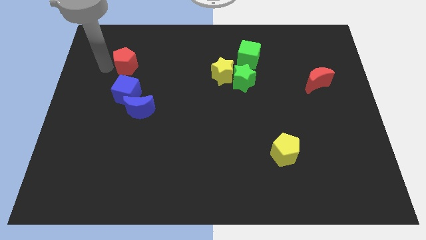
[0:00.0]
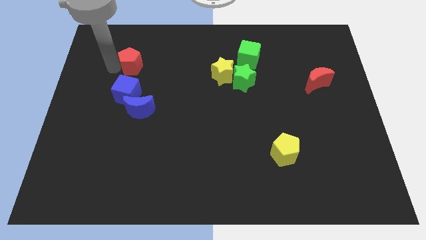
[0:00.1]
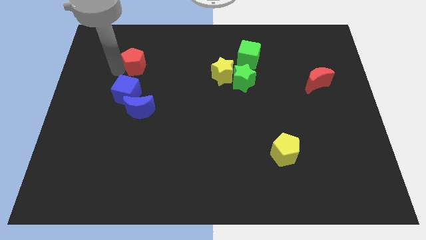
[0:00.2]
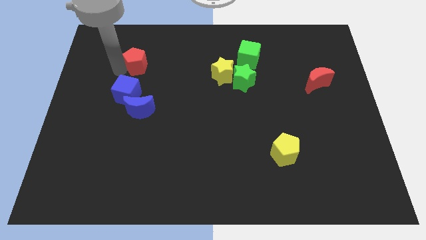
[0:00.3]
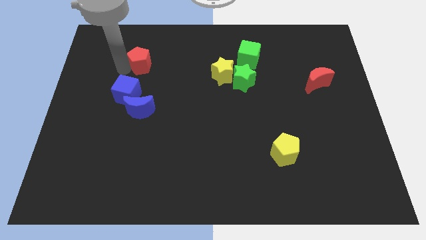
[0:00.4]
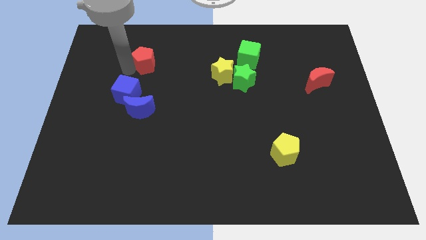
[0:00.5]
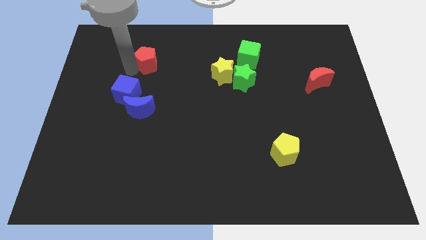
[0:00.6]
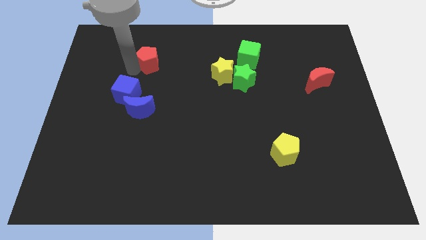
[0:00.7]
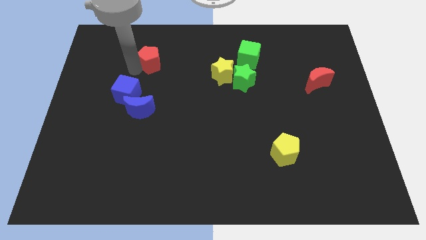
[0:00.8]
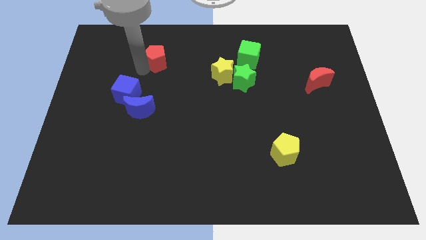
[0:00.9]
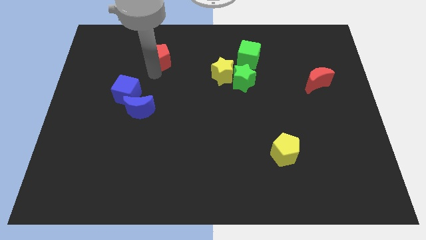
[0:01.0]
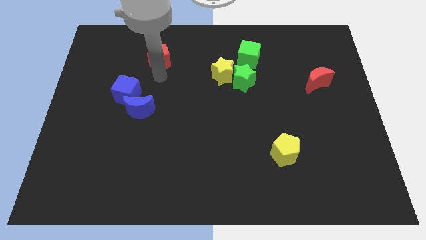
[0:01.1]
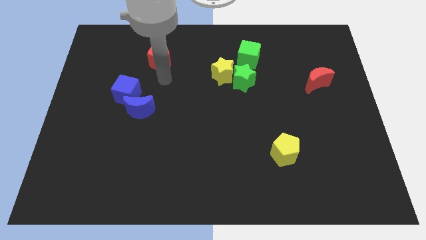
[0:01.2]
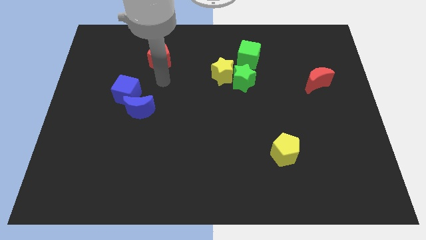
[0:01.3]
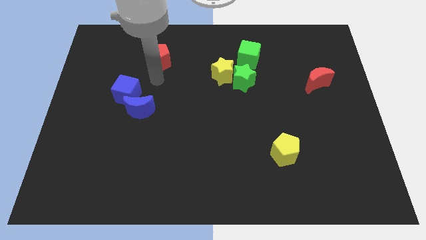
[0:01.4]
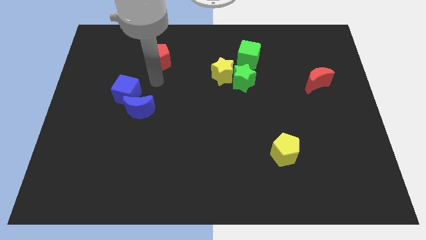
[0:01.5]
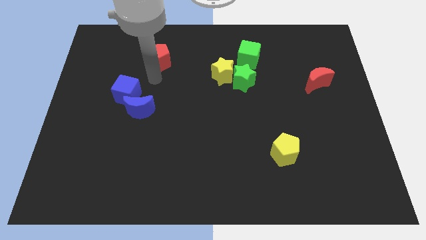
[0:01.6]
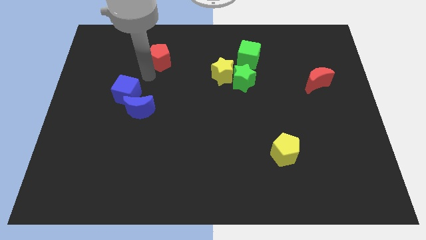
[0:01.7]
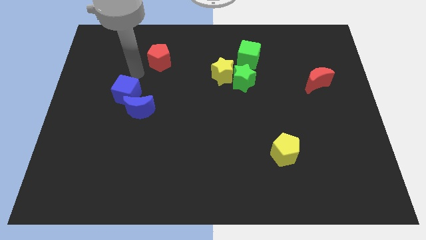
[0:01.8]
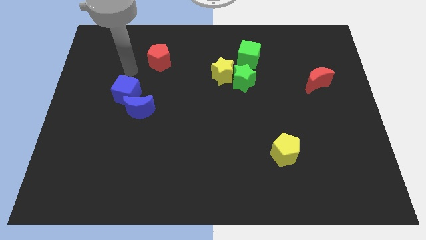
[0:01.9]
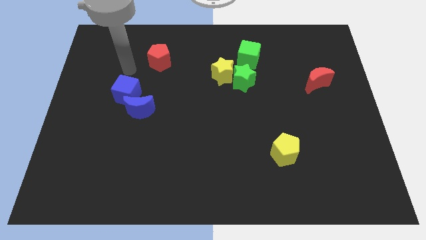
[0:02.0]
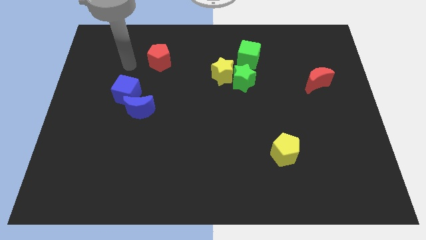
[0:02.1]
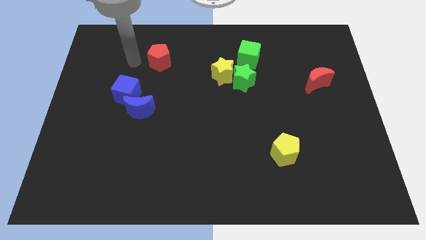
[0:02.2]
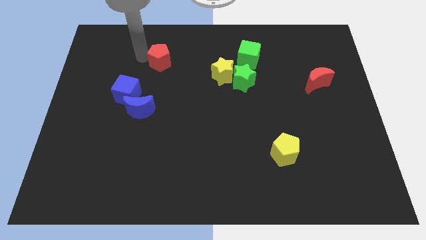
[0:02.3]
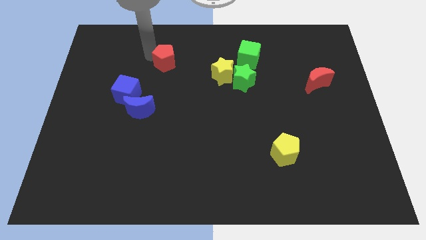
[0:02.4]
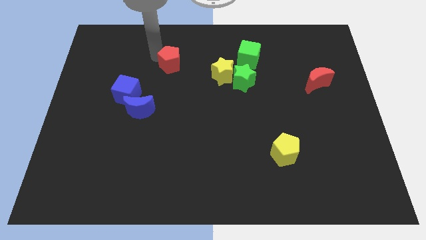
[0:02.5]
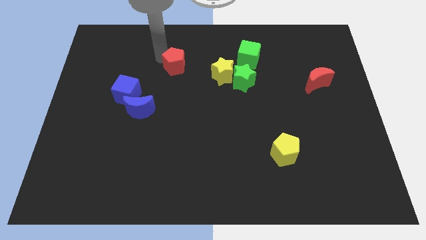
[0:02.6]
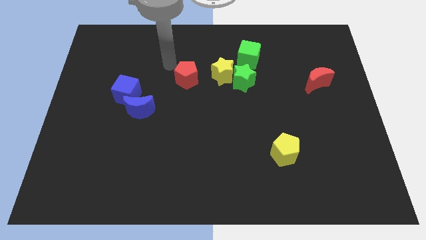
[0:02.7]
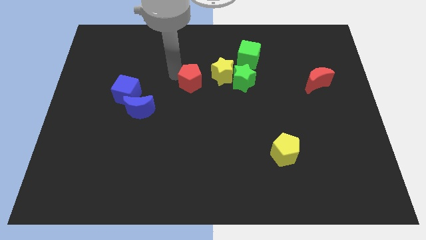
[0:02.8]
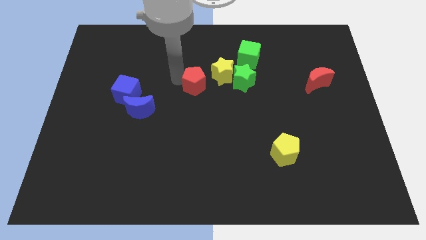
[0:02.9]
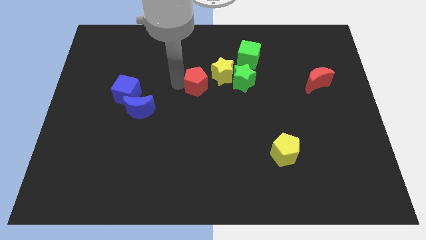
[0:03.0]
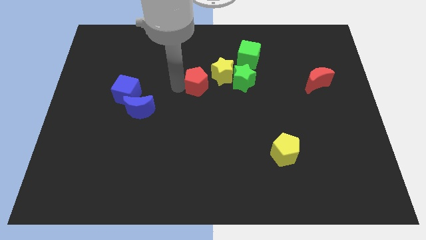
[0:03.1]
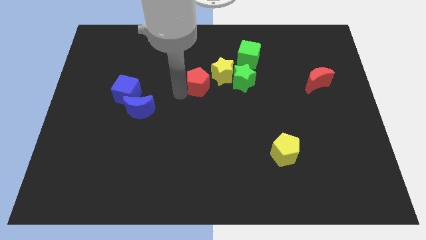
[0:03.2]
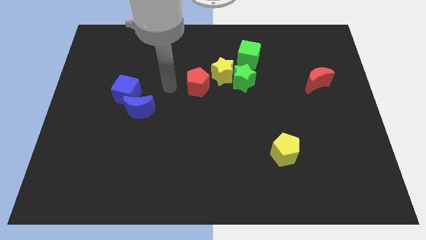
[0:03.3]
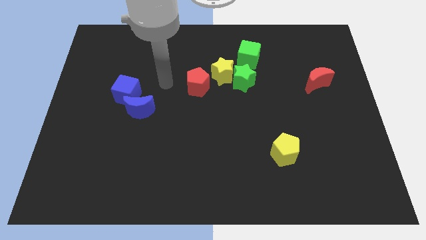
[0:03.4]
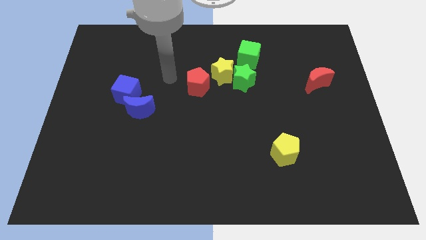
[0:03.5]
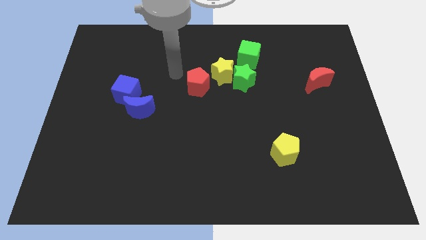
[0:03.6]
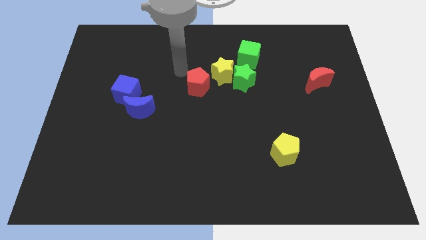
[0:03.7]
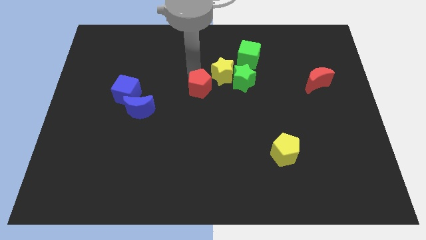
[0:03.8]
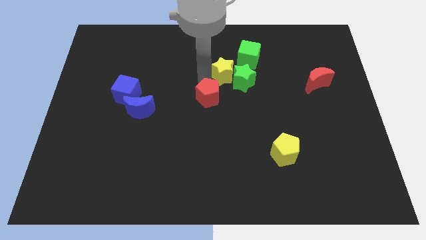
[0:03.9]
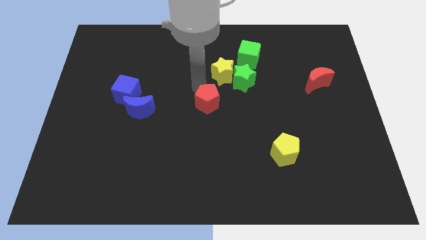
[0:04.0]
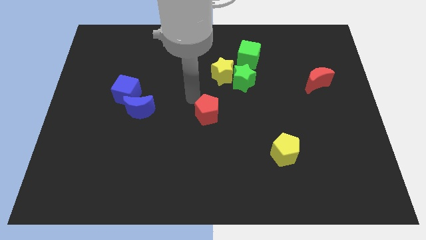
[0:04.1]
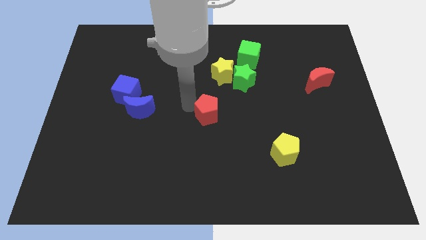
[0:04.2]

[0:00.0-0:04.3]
place the red pentagon at the center of the board

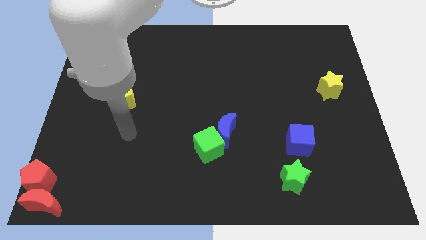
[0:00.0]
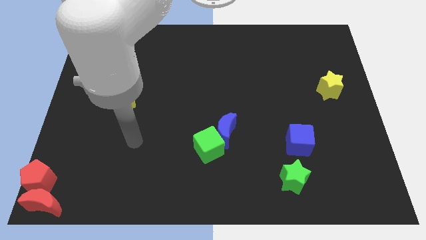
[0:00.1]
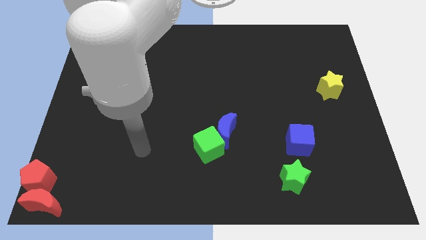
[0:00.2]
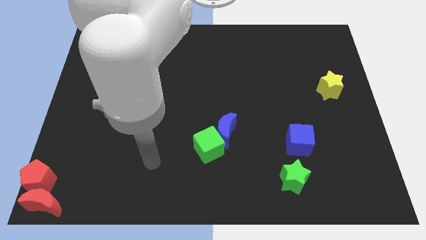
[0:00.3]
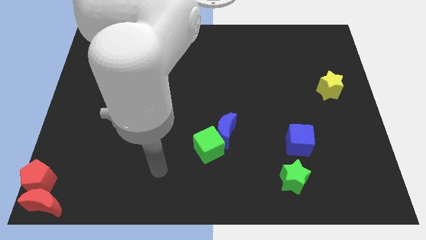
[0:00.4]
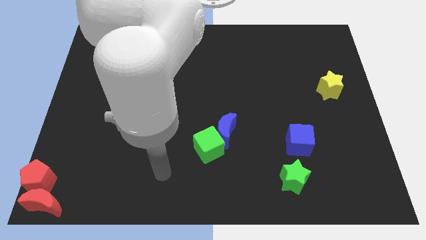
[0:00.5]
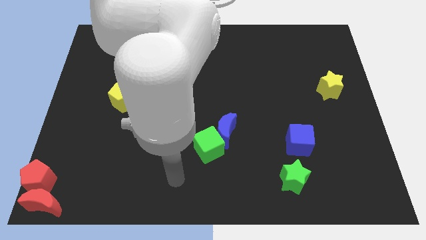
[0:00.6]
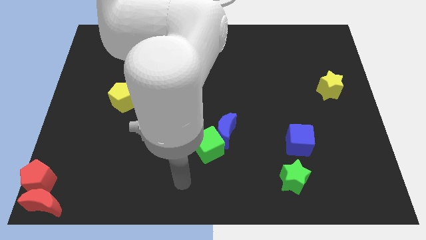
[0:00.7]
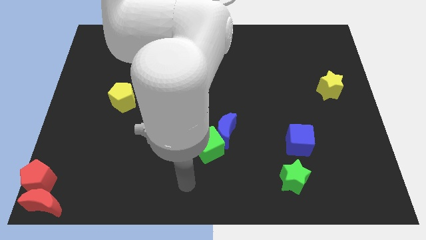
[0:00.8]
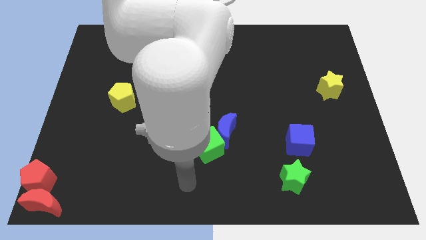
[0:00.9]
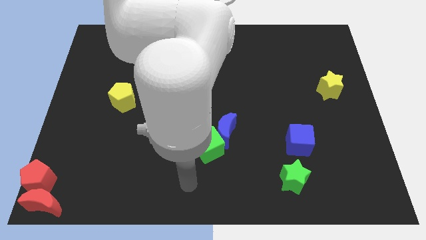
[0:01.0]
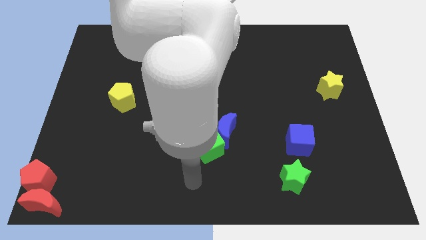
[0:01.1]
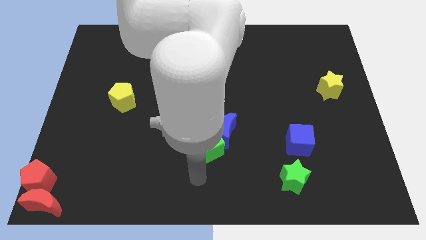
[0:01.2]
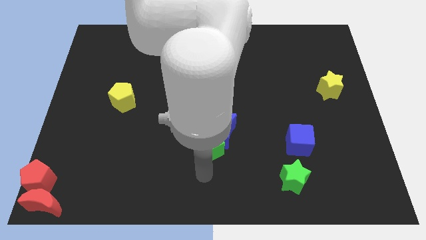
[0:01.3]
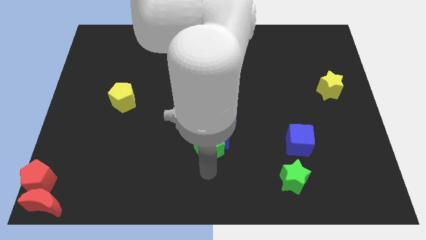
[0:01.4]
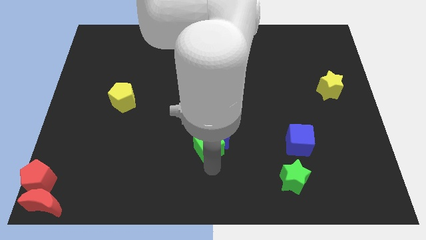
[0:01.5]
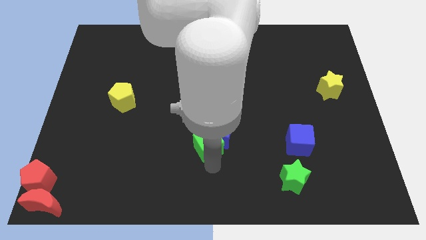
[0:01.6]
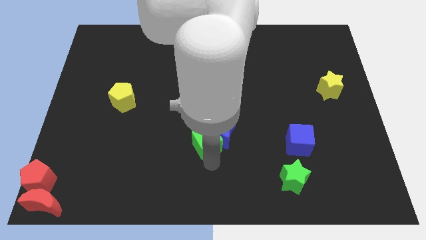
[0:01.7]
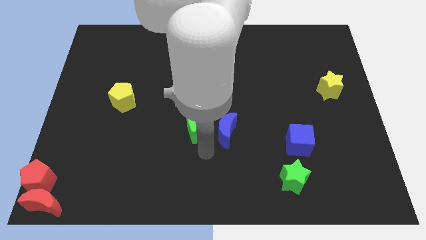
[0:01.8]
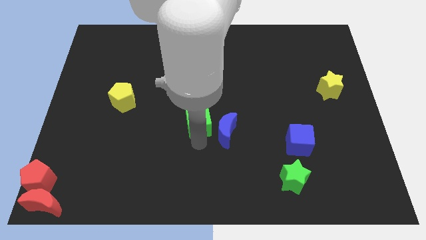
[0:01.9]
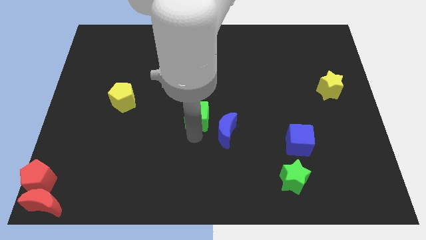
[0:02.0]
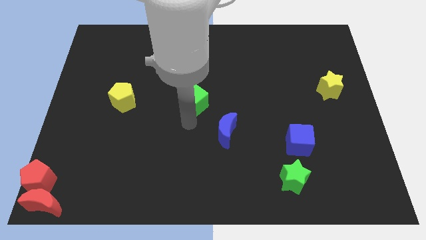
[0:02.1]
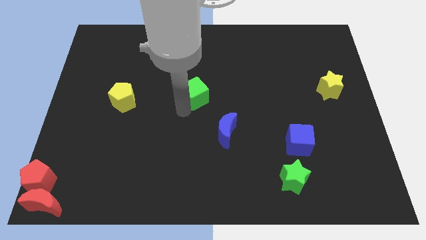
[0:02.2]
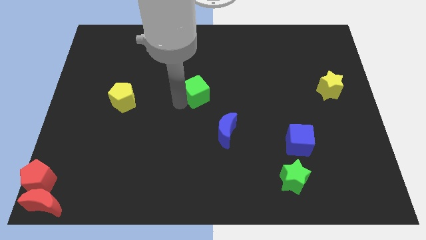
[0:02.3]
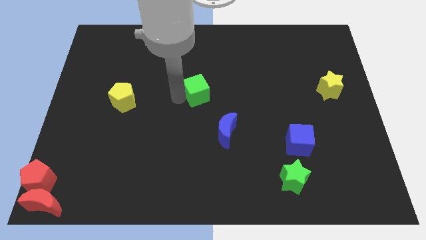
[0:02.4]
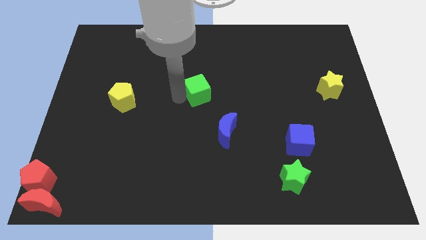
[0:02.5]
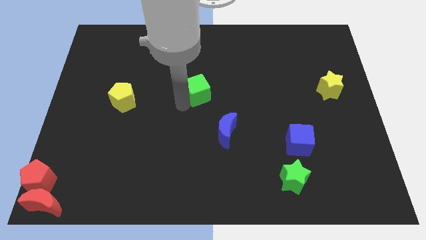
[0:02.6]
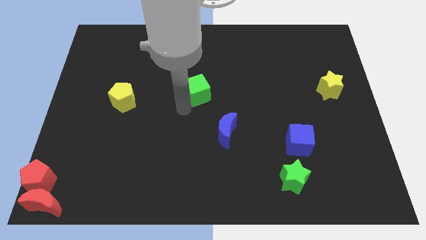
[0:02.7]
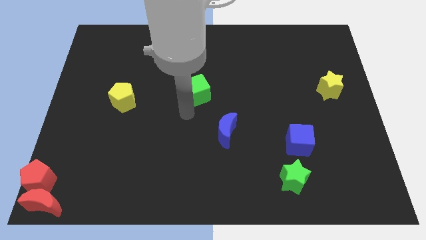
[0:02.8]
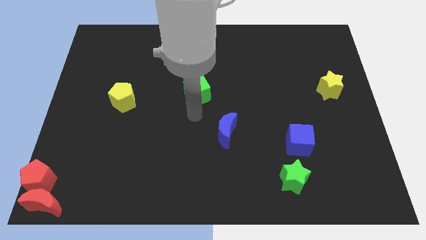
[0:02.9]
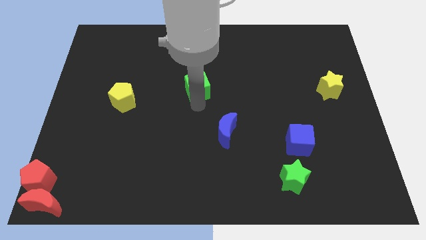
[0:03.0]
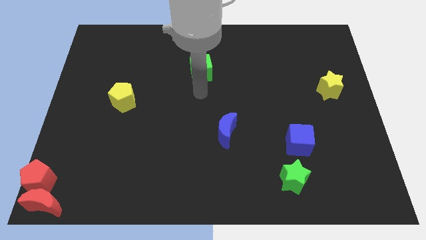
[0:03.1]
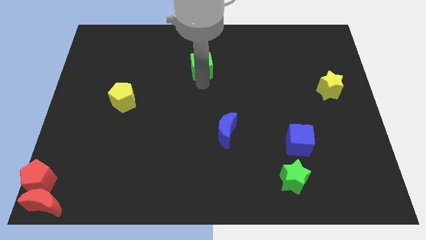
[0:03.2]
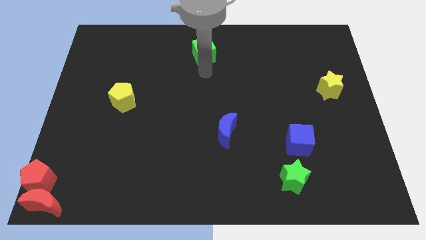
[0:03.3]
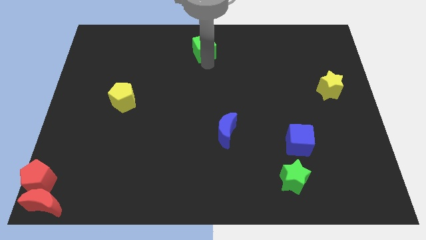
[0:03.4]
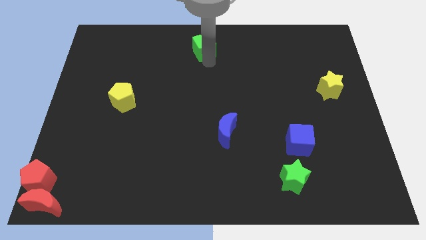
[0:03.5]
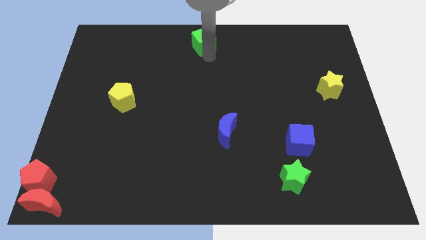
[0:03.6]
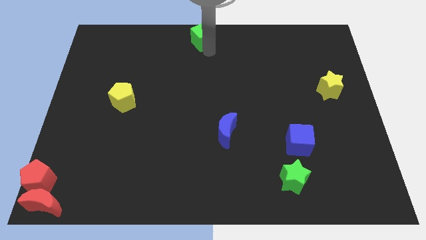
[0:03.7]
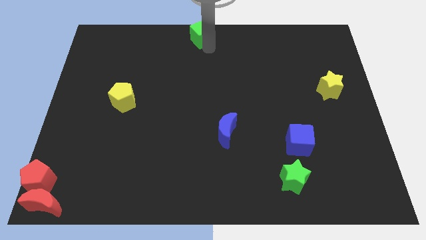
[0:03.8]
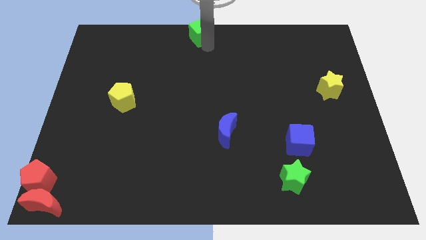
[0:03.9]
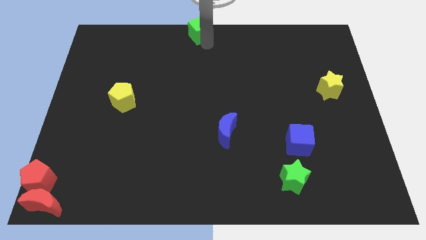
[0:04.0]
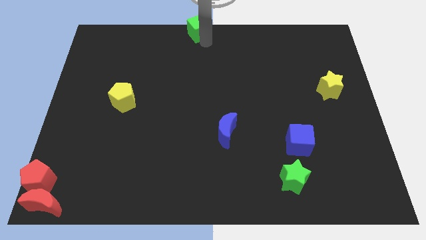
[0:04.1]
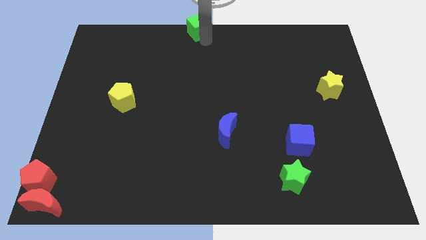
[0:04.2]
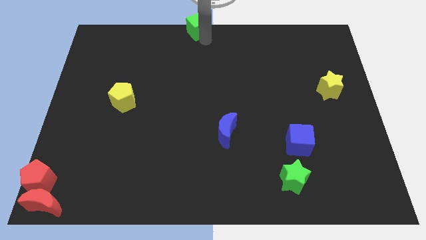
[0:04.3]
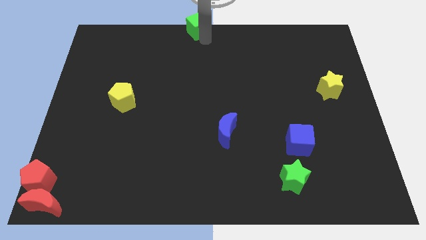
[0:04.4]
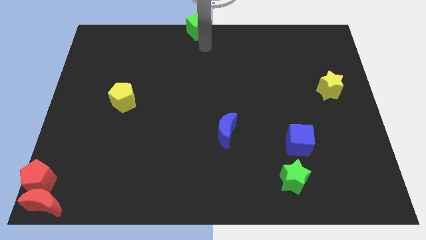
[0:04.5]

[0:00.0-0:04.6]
put the green cube at the top center

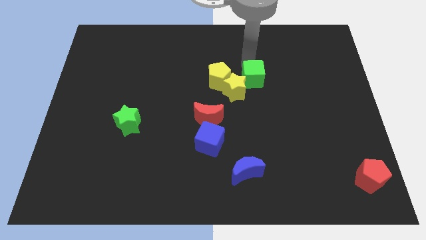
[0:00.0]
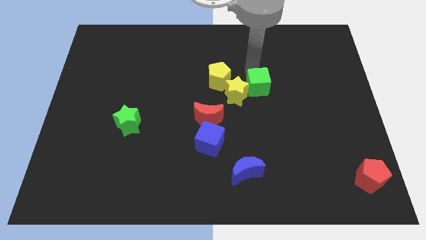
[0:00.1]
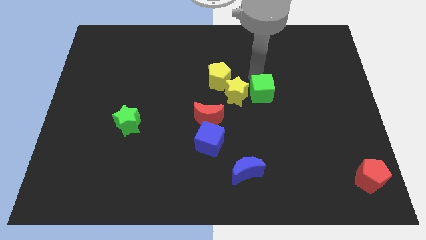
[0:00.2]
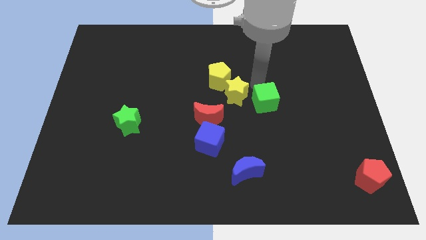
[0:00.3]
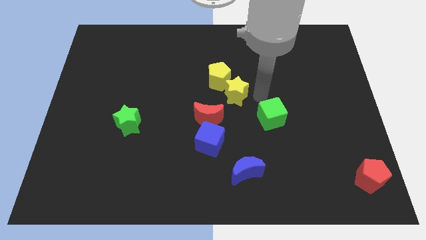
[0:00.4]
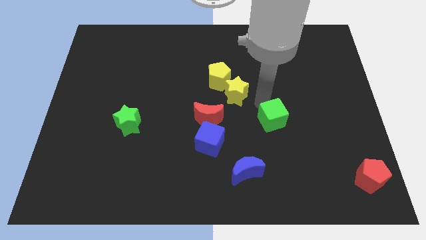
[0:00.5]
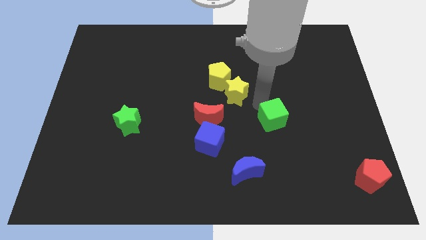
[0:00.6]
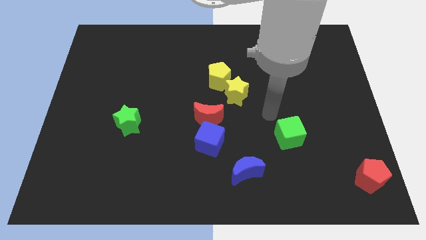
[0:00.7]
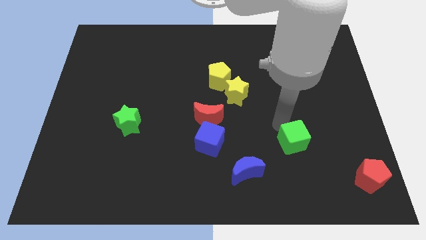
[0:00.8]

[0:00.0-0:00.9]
place the green cube parallel to blue cube
